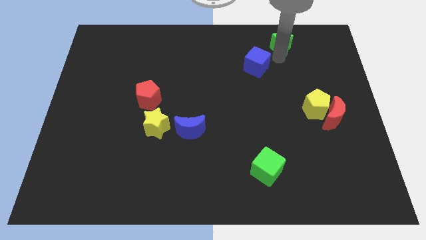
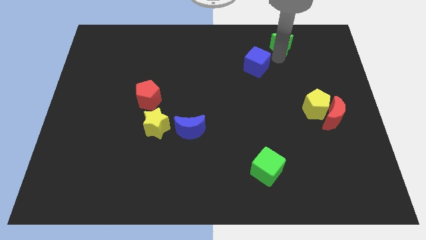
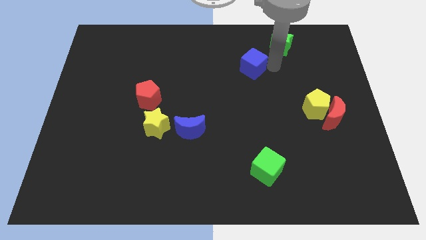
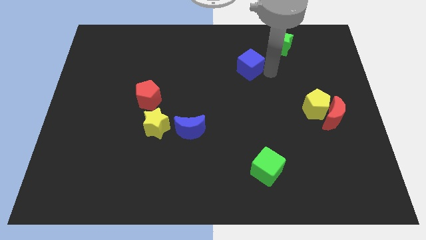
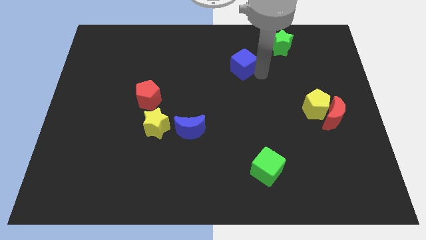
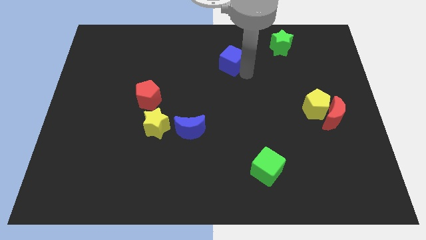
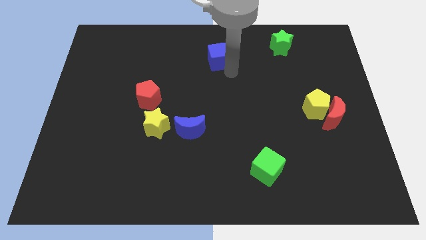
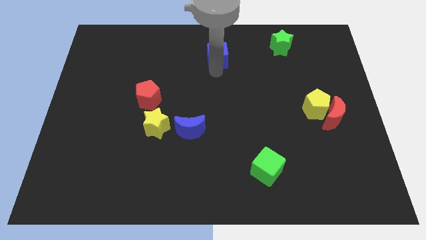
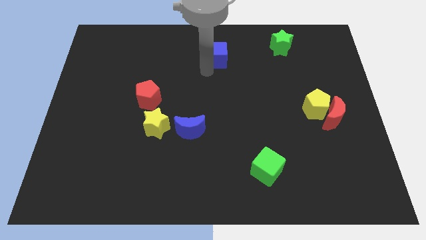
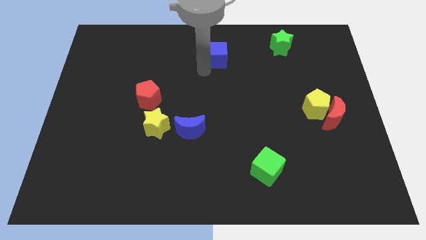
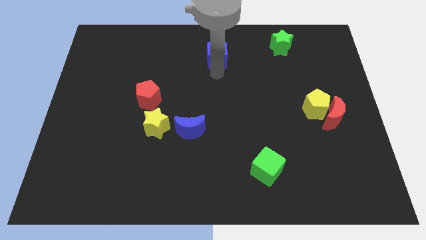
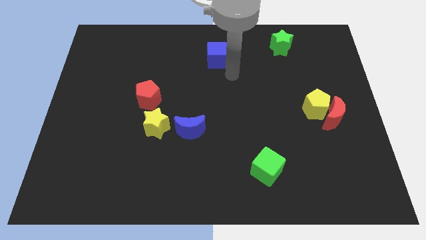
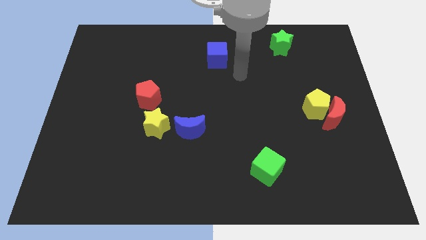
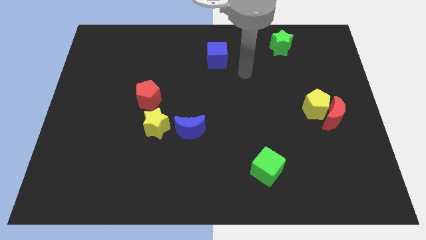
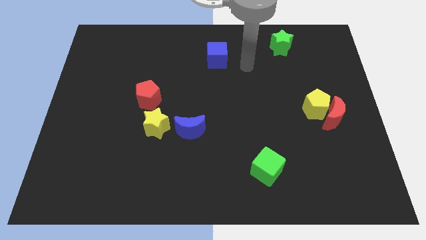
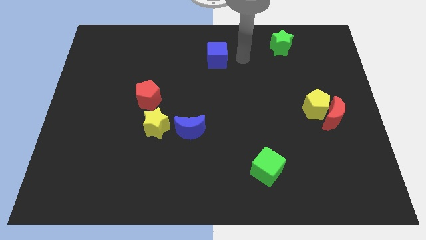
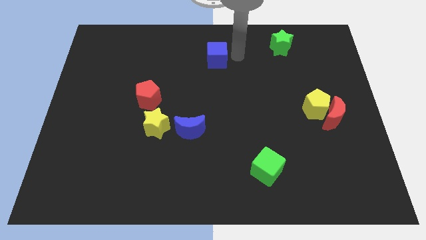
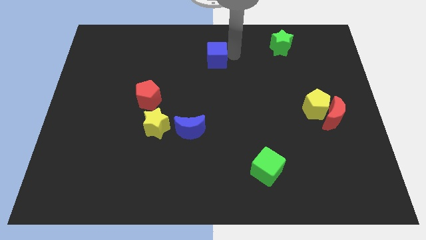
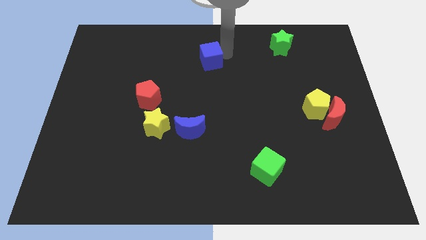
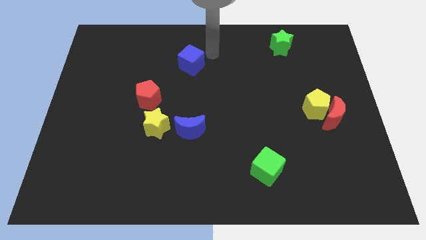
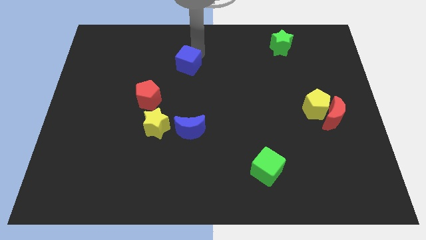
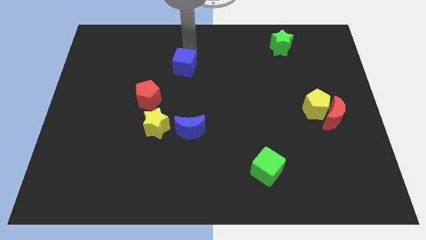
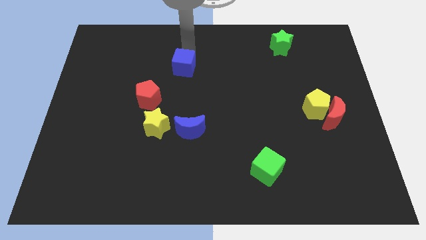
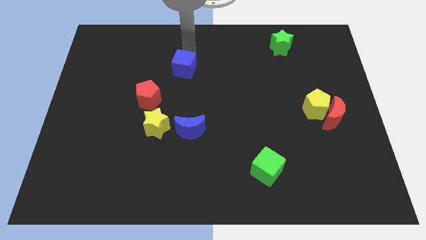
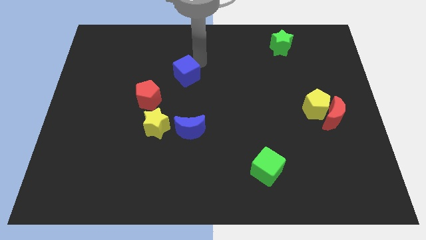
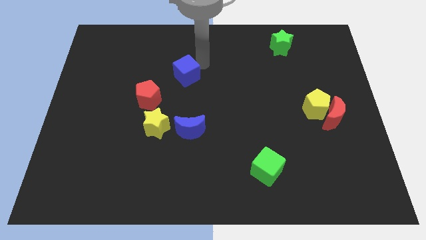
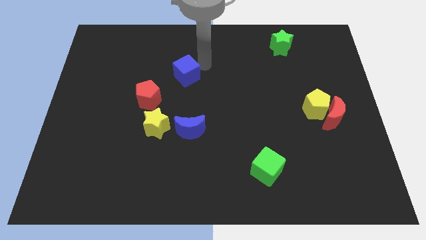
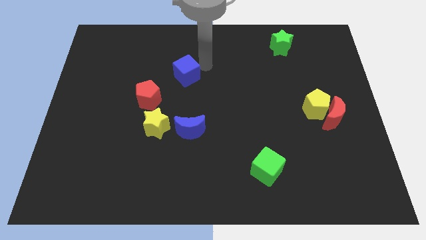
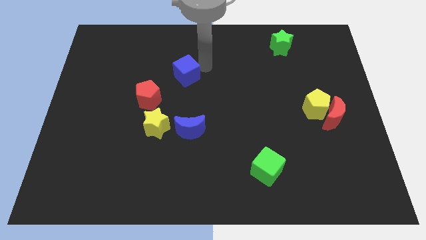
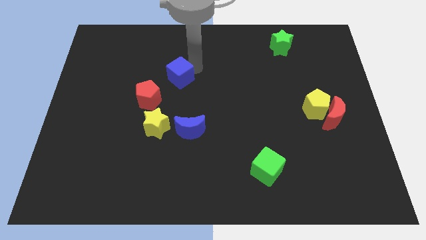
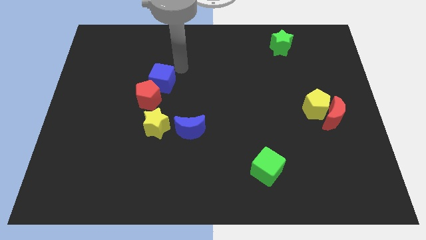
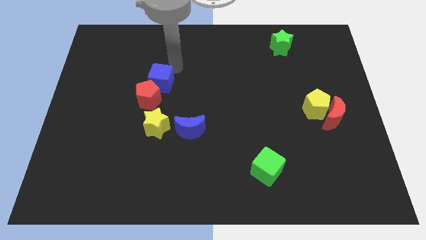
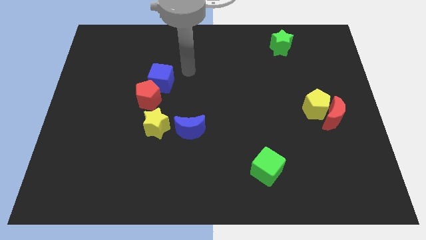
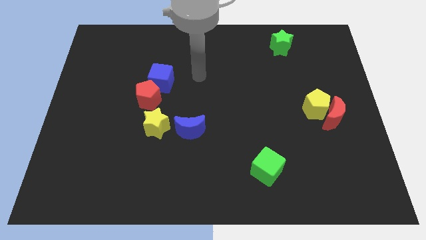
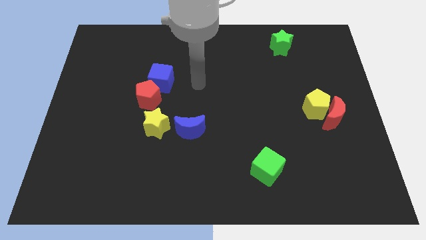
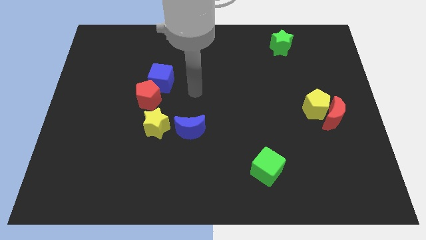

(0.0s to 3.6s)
move the blue cube into the red pentagon

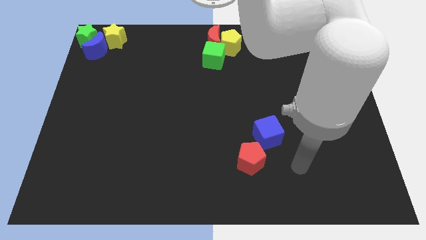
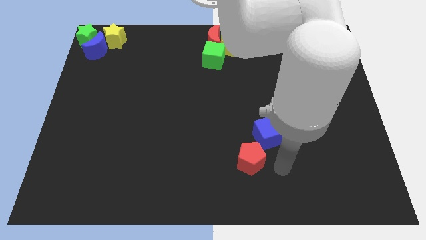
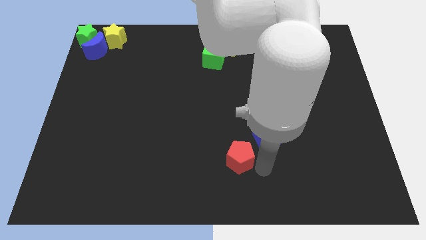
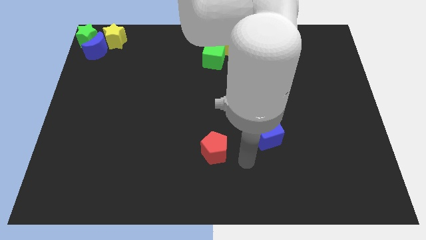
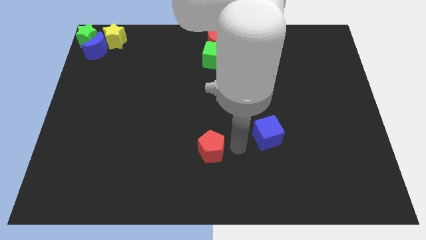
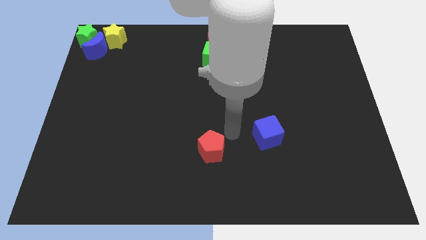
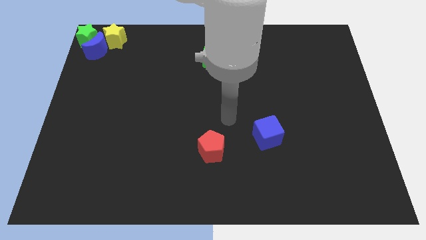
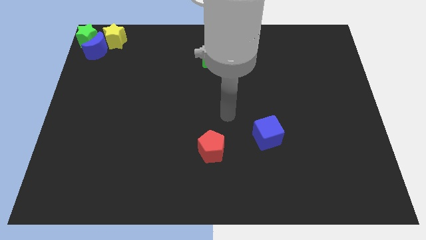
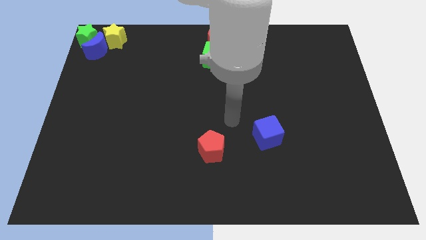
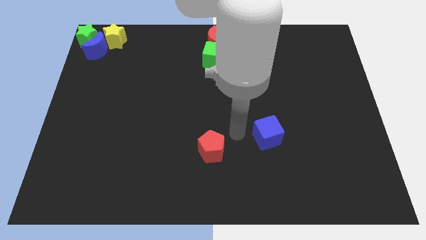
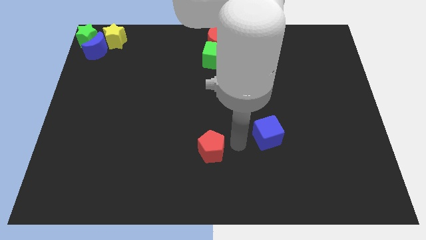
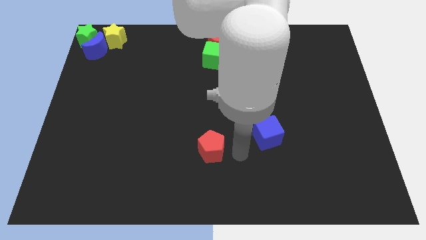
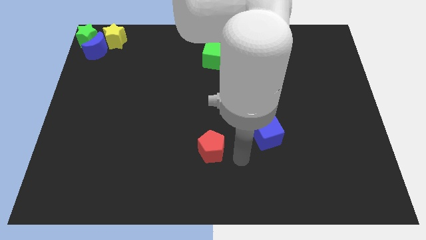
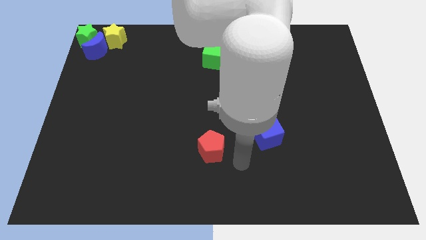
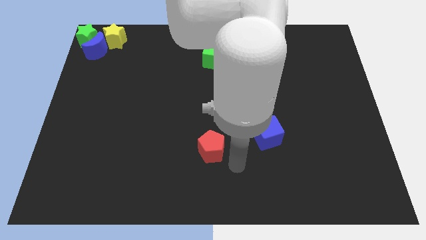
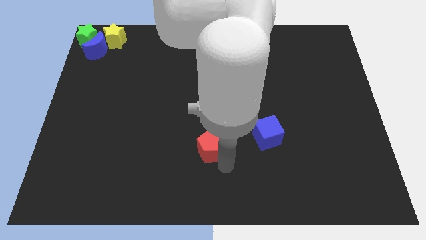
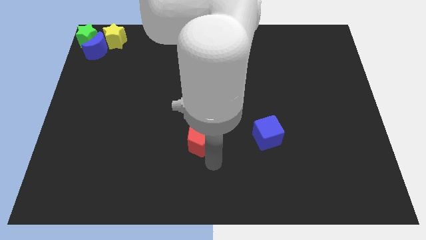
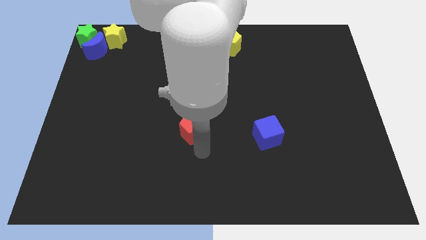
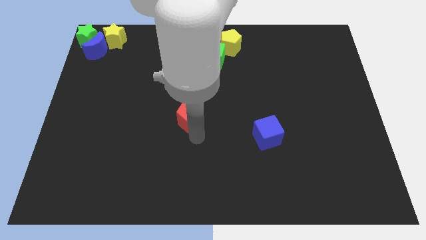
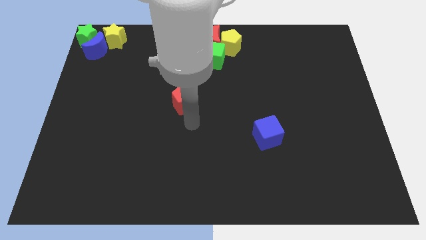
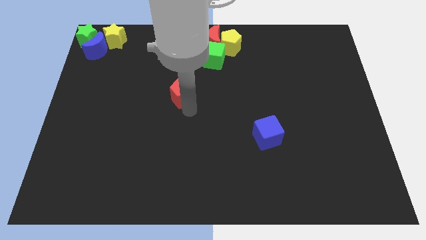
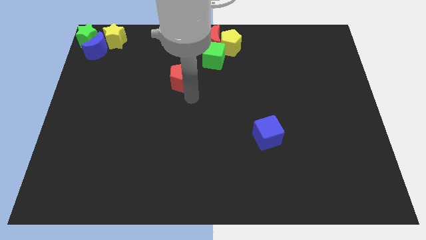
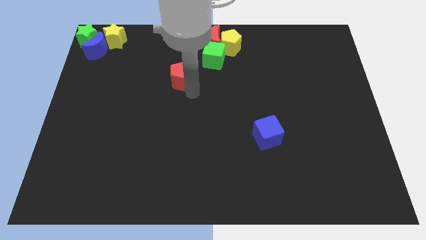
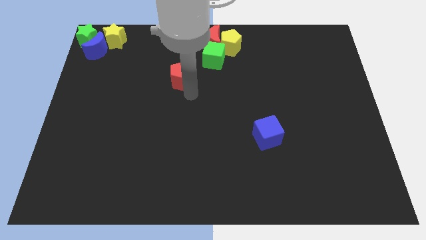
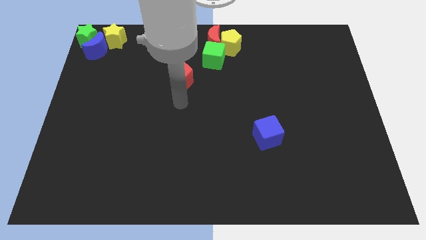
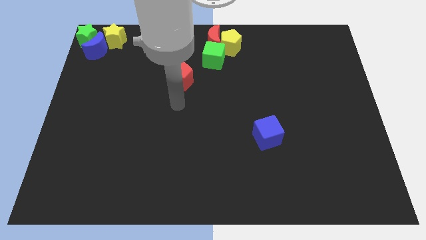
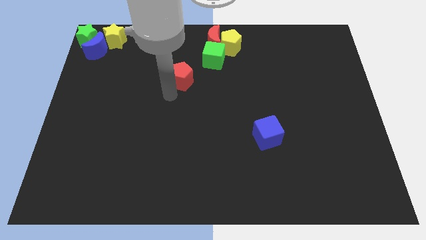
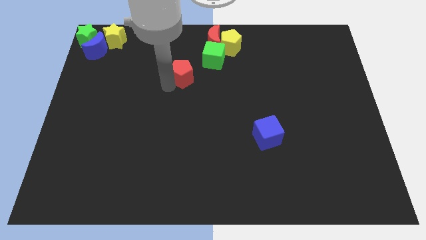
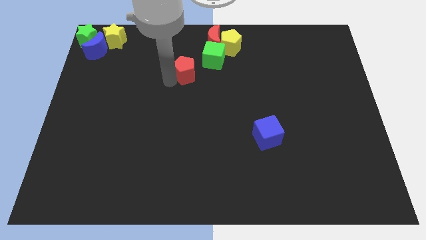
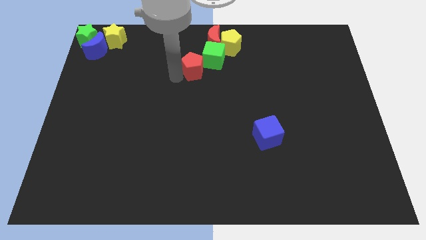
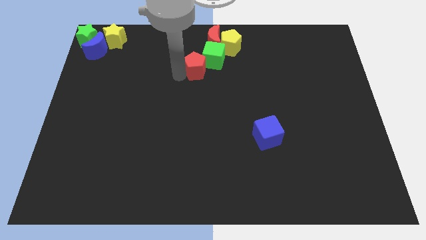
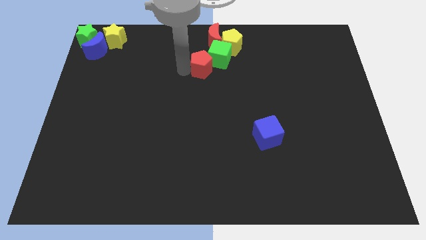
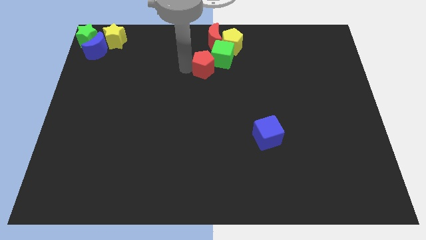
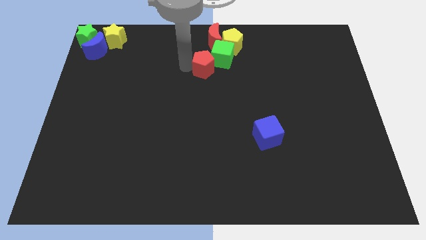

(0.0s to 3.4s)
push red pentagon into the green cube

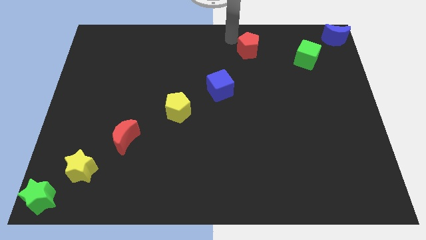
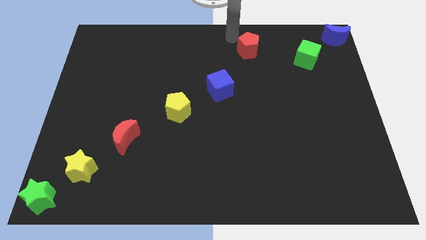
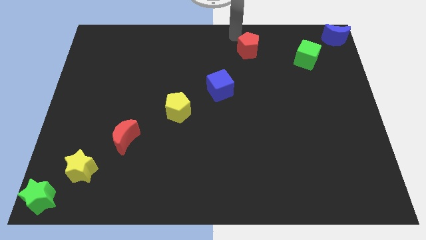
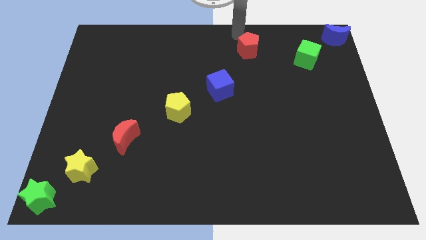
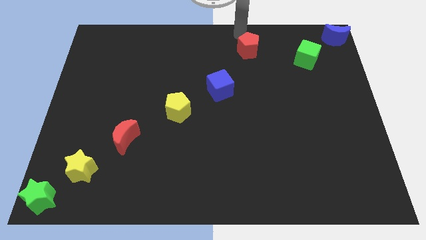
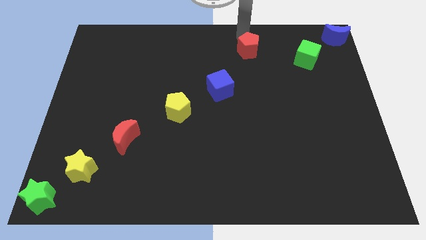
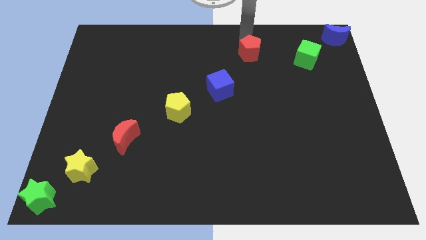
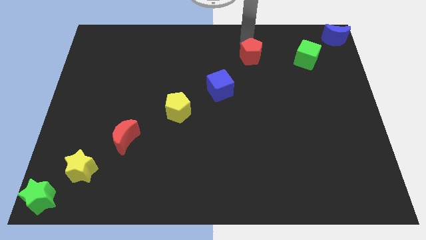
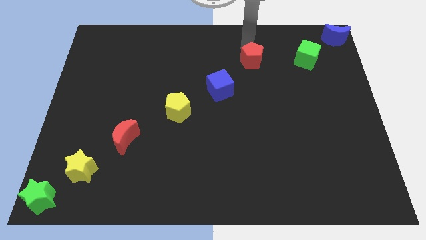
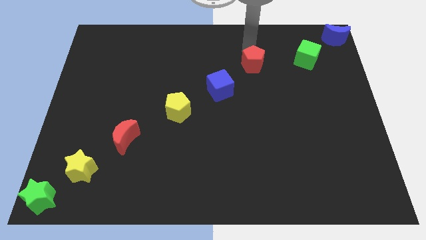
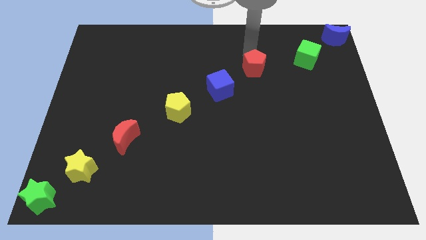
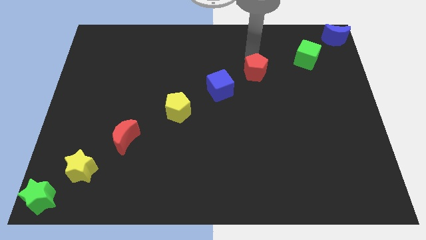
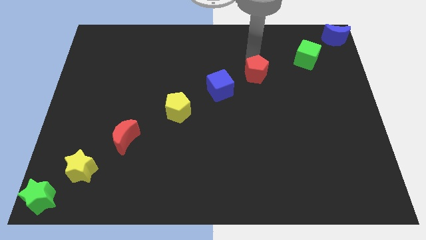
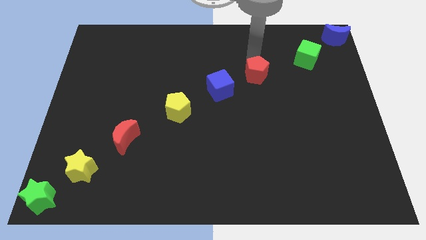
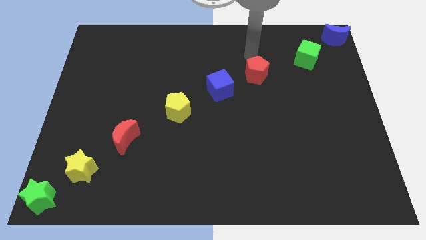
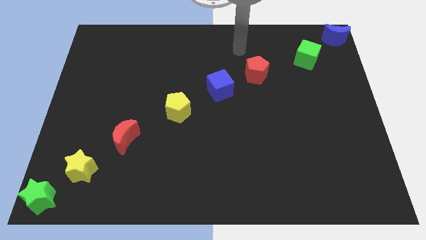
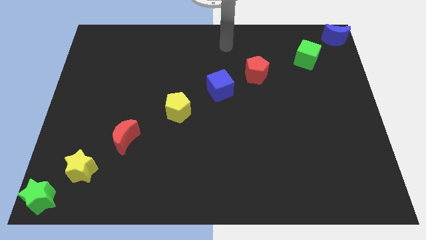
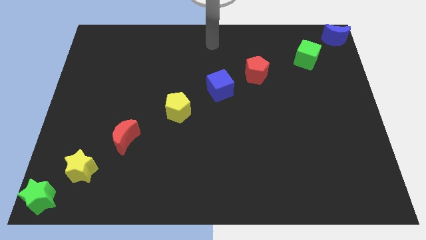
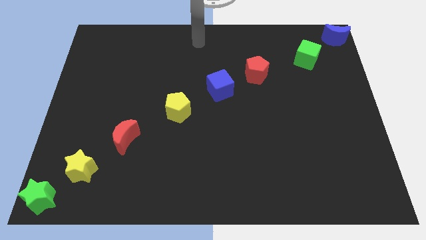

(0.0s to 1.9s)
place the red pentagon between the blue cube and green cube

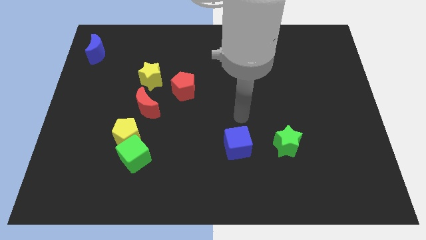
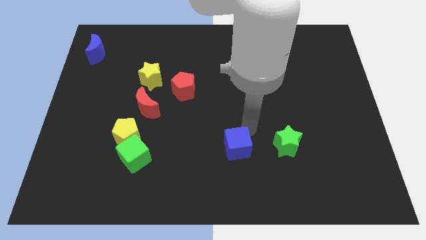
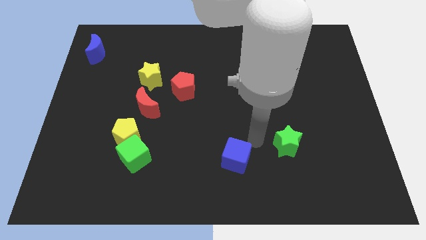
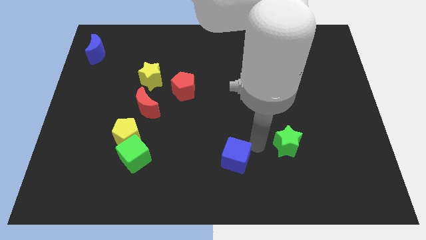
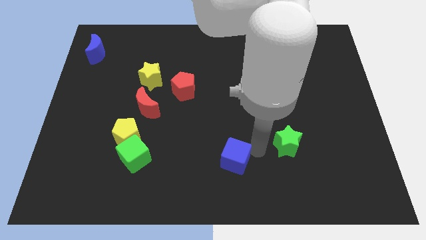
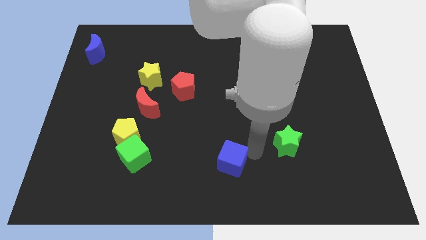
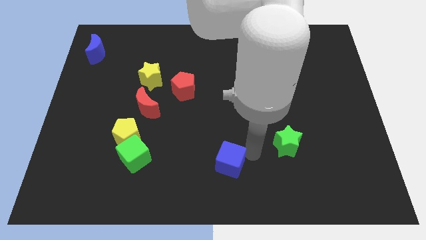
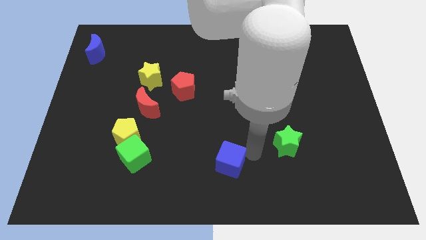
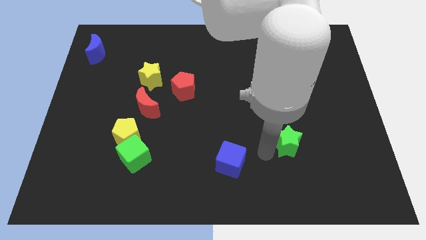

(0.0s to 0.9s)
push the blue cube slightly downwards
